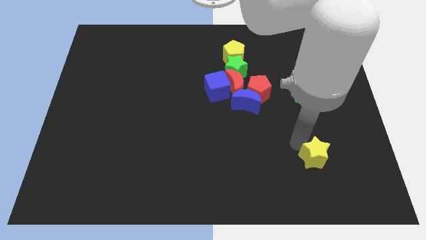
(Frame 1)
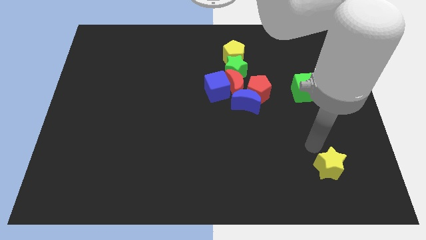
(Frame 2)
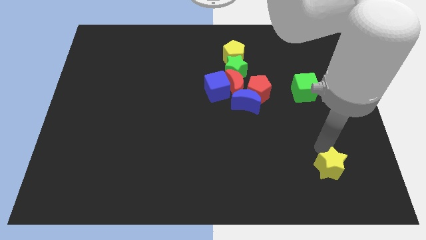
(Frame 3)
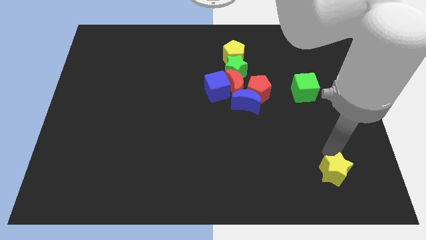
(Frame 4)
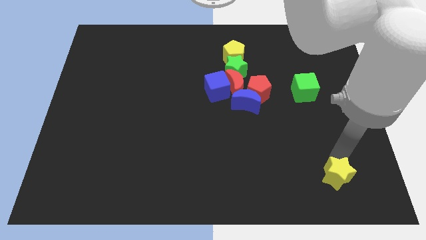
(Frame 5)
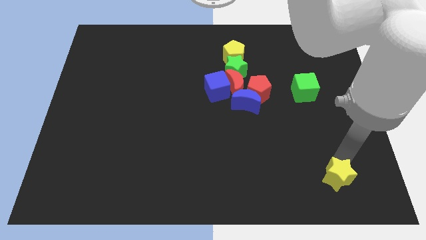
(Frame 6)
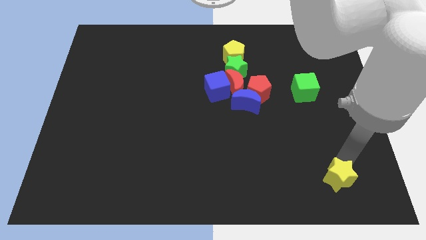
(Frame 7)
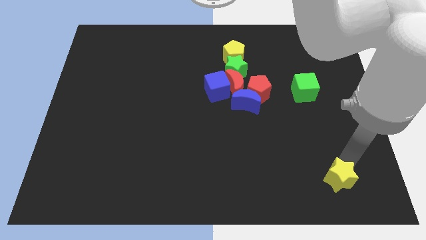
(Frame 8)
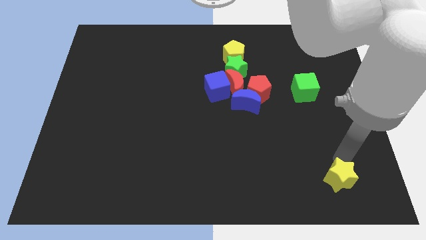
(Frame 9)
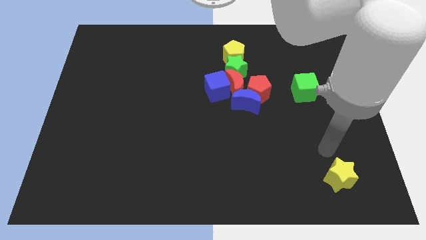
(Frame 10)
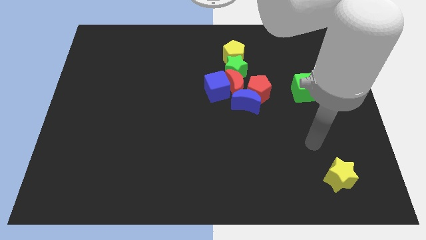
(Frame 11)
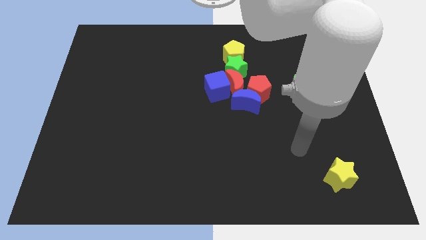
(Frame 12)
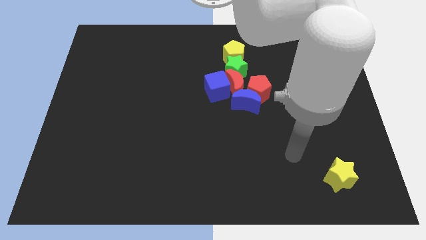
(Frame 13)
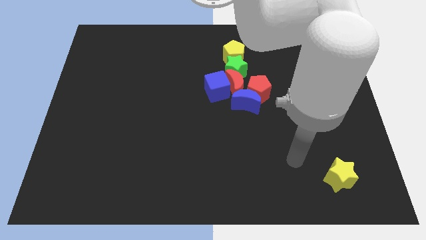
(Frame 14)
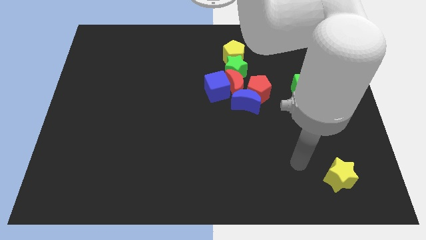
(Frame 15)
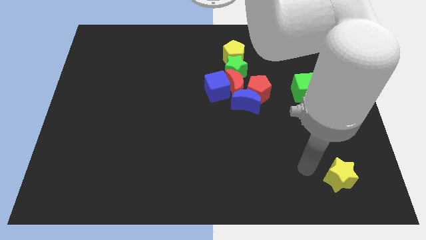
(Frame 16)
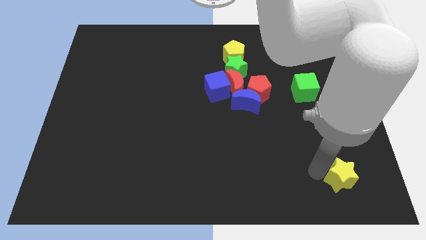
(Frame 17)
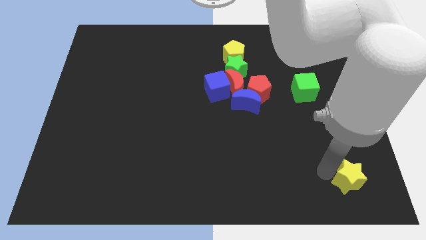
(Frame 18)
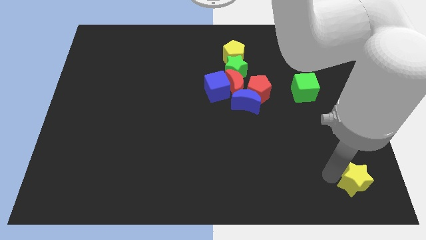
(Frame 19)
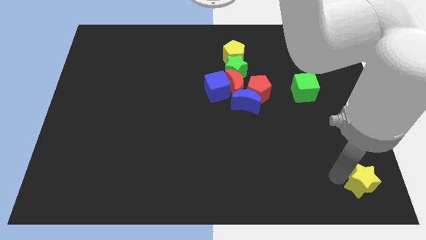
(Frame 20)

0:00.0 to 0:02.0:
push the yellow star slightly downwards of the board

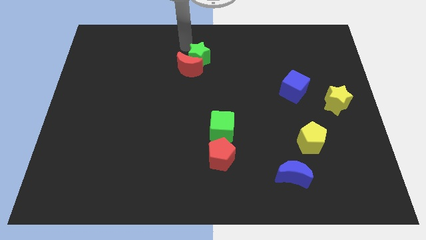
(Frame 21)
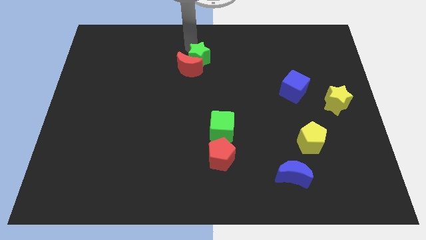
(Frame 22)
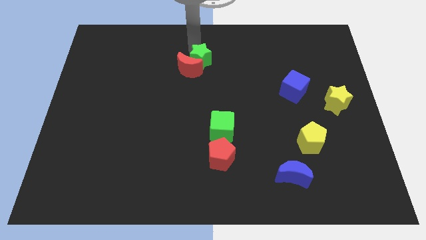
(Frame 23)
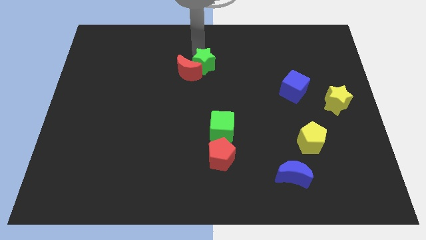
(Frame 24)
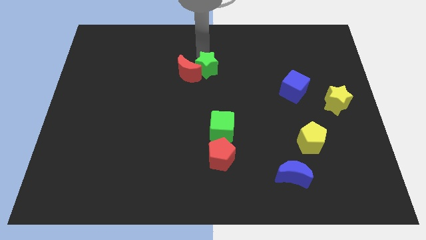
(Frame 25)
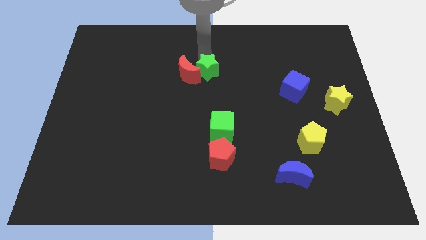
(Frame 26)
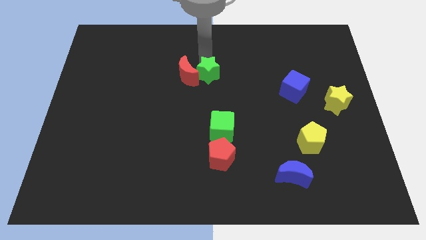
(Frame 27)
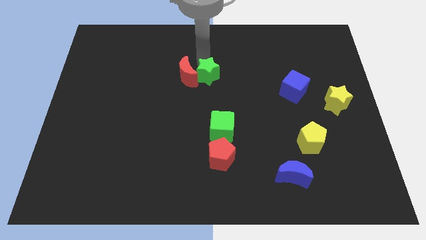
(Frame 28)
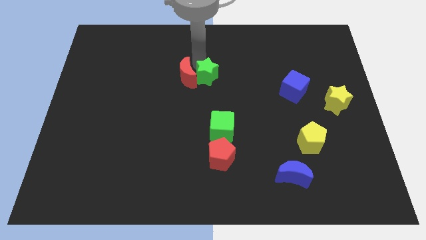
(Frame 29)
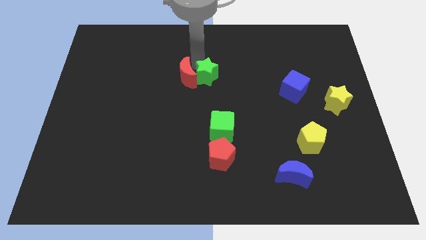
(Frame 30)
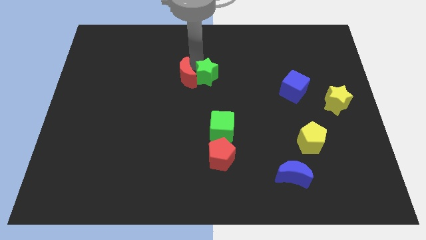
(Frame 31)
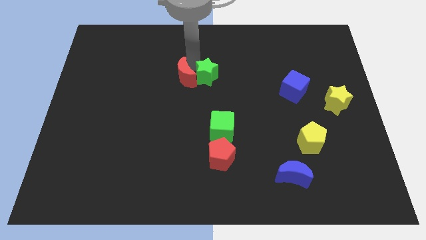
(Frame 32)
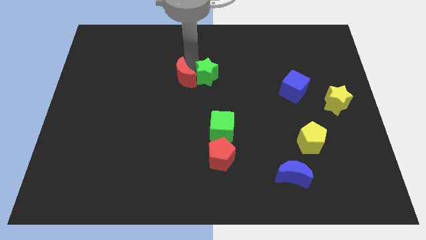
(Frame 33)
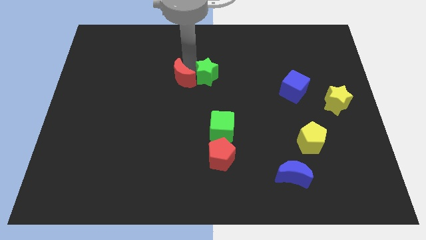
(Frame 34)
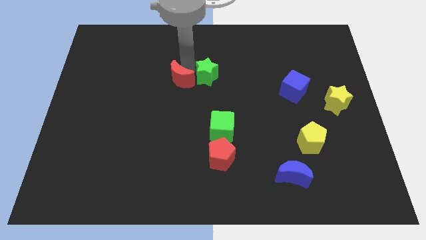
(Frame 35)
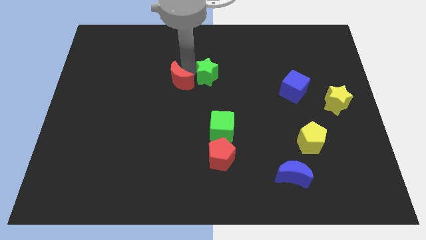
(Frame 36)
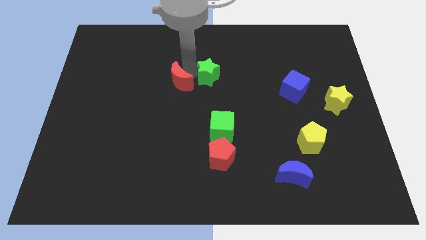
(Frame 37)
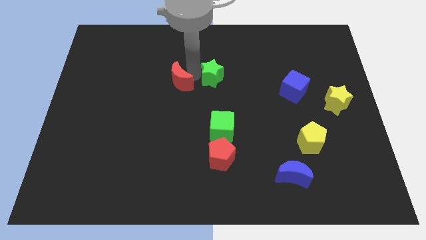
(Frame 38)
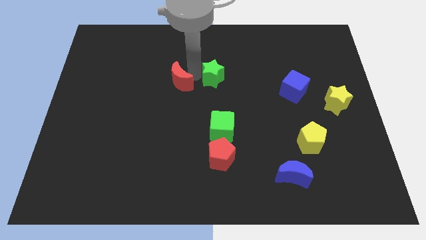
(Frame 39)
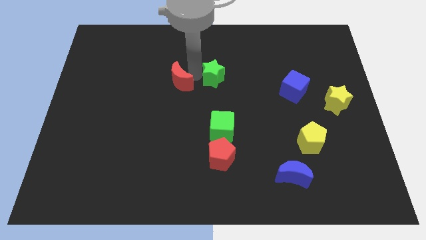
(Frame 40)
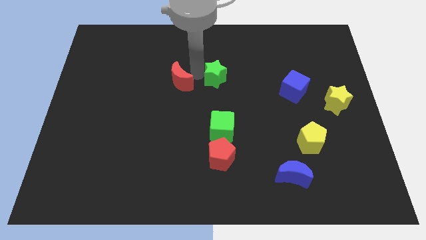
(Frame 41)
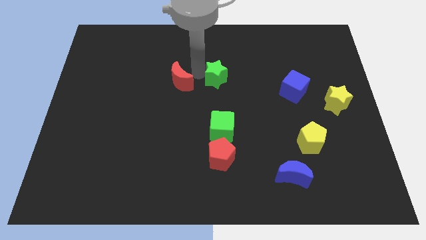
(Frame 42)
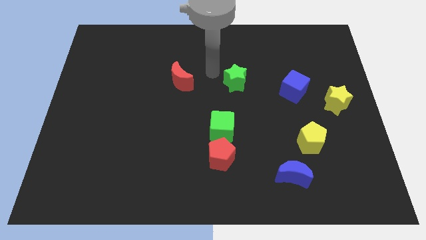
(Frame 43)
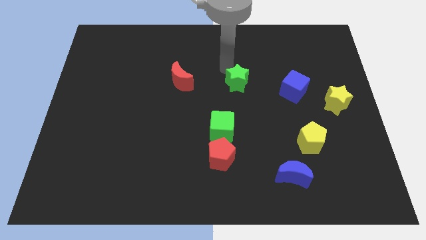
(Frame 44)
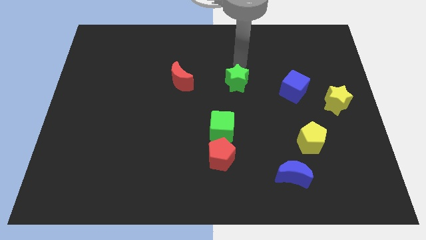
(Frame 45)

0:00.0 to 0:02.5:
push the green star to the top of the green cube

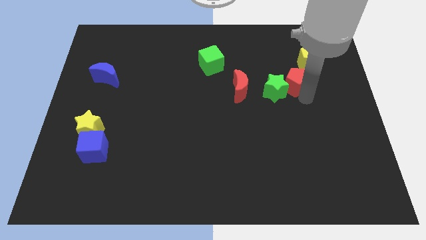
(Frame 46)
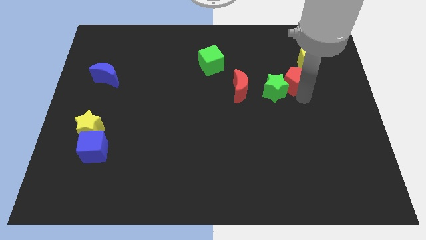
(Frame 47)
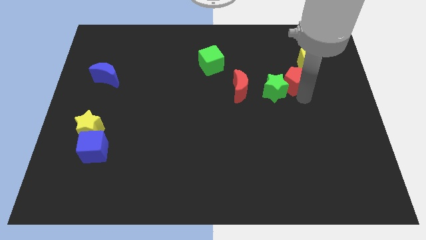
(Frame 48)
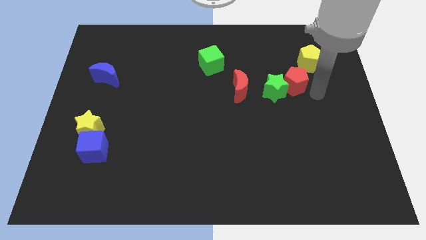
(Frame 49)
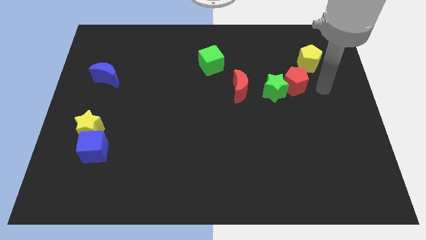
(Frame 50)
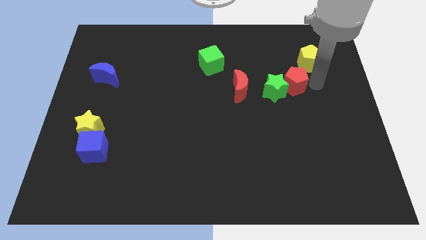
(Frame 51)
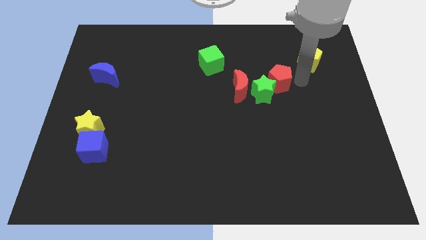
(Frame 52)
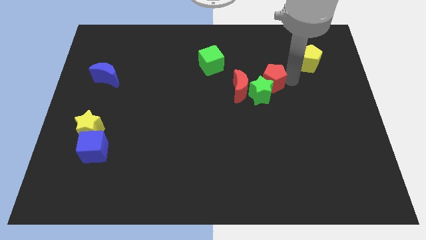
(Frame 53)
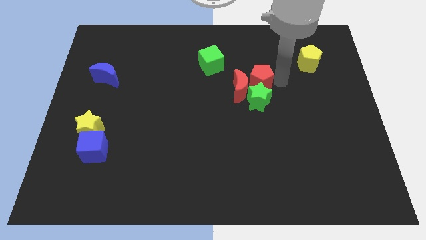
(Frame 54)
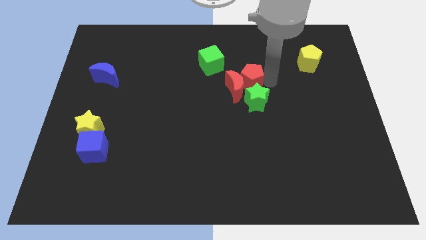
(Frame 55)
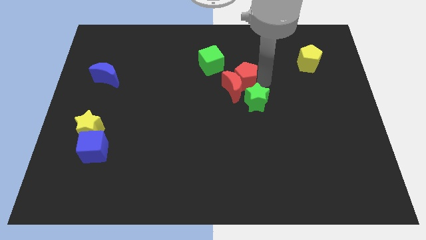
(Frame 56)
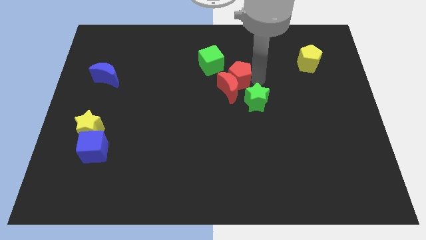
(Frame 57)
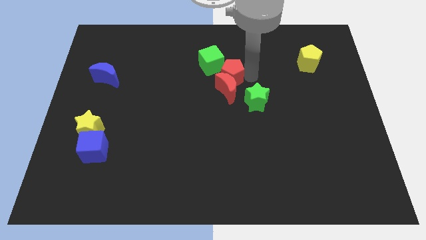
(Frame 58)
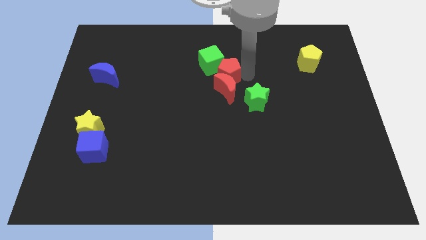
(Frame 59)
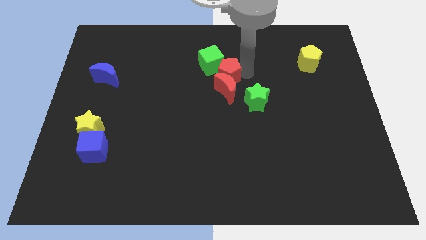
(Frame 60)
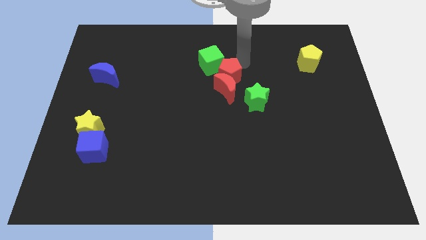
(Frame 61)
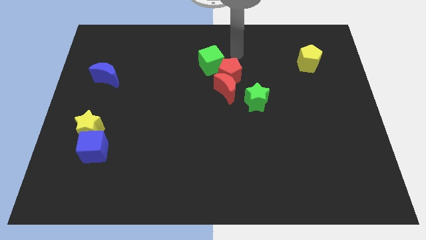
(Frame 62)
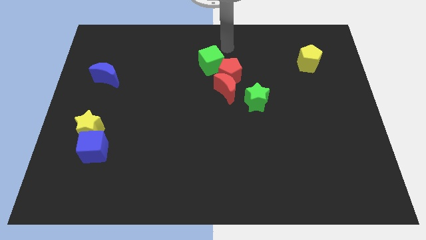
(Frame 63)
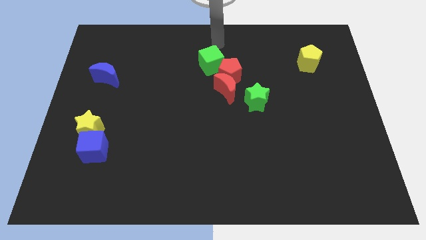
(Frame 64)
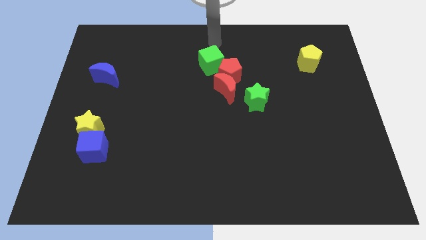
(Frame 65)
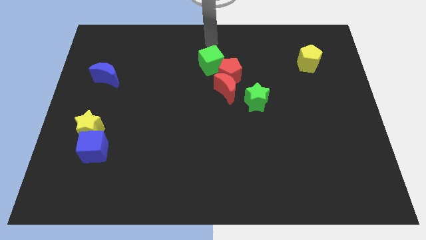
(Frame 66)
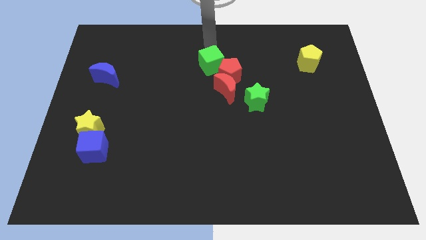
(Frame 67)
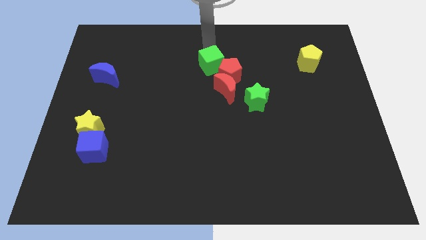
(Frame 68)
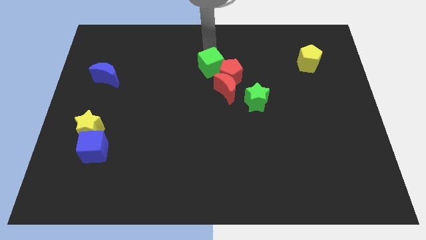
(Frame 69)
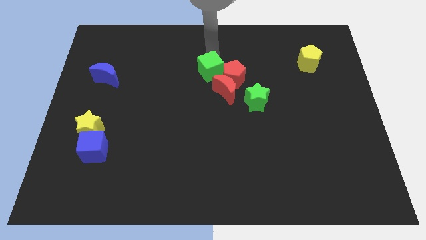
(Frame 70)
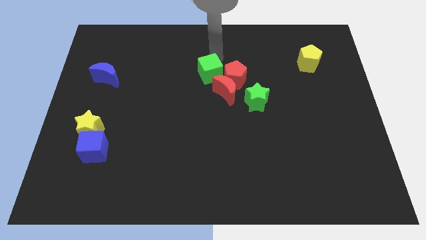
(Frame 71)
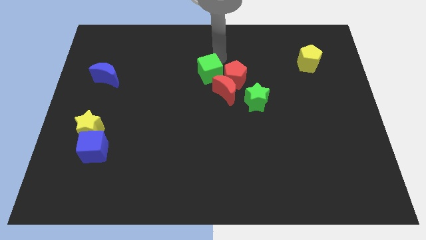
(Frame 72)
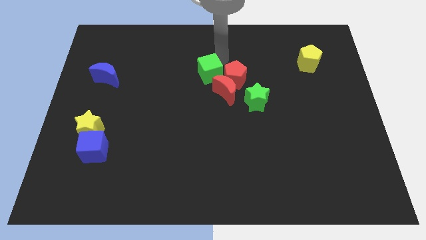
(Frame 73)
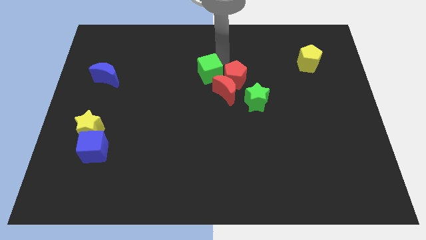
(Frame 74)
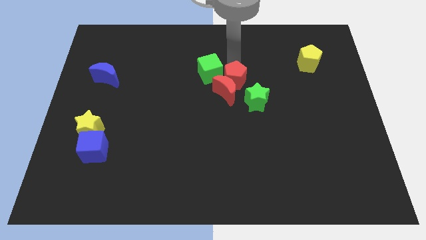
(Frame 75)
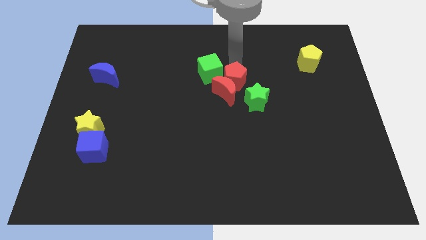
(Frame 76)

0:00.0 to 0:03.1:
push the red blocks and green cube to the top left side of the green star

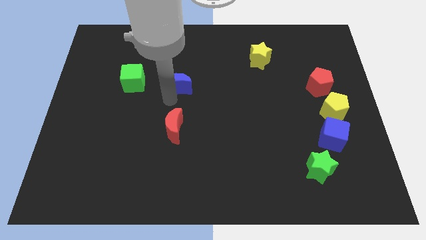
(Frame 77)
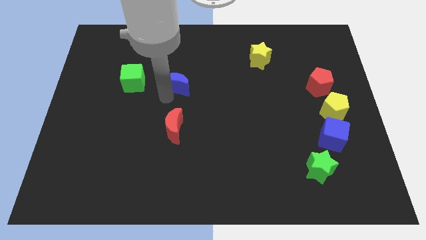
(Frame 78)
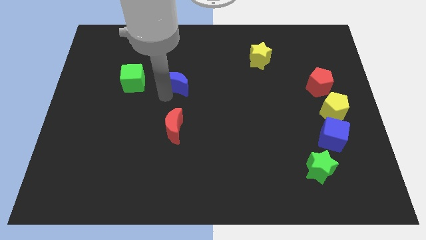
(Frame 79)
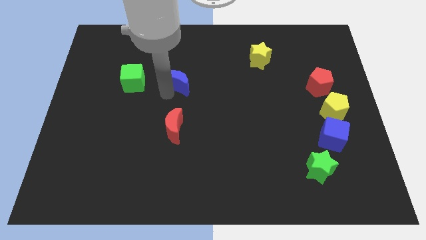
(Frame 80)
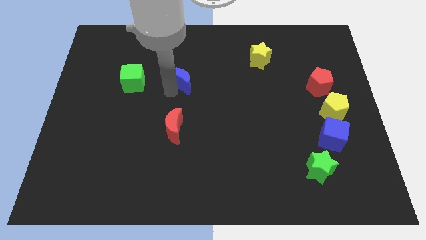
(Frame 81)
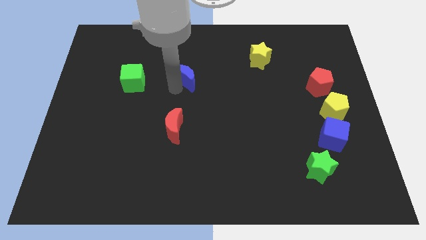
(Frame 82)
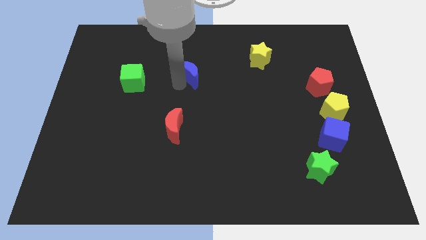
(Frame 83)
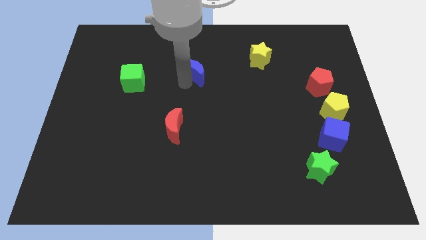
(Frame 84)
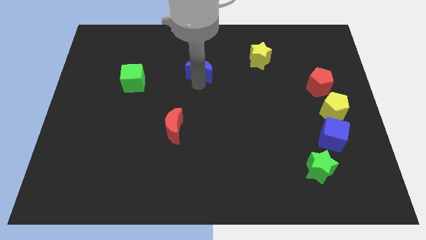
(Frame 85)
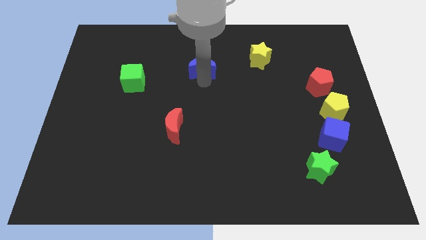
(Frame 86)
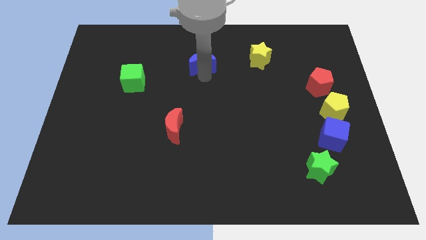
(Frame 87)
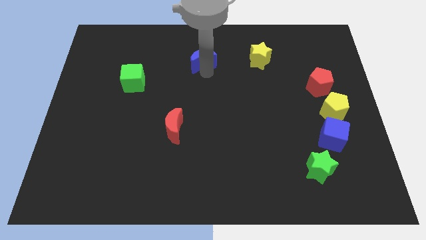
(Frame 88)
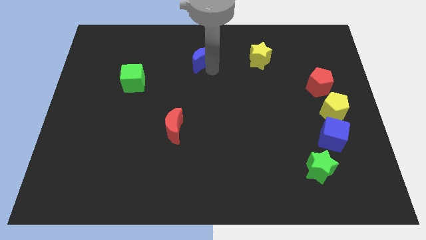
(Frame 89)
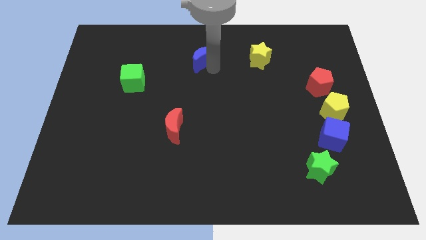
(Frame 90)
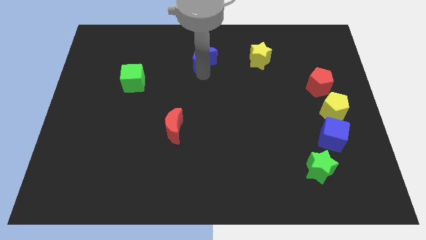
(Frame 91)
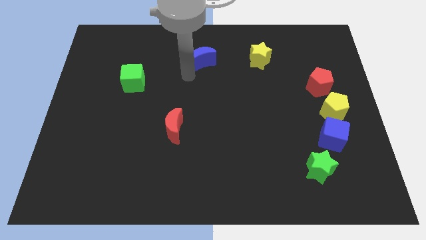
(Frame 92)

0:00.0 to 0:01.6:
move the blue crescent to the top center of the board
